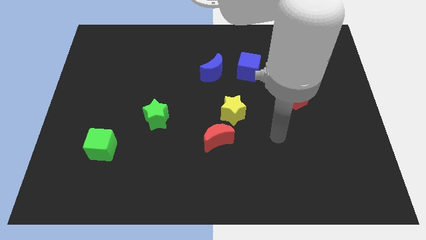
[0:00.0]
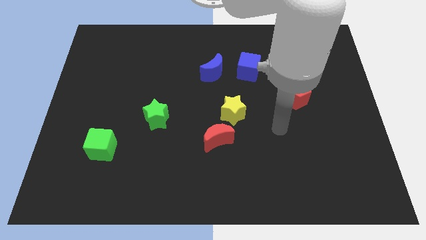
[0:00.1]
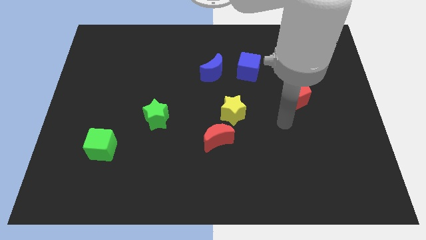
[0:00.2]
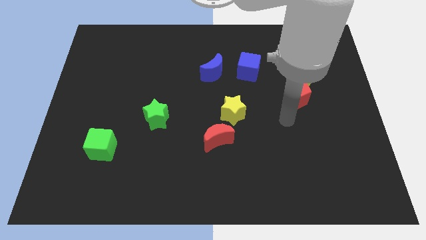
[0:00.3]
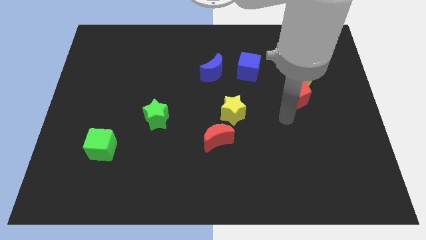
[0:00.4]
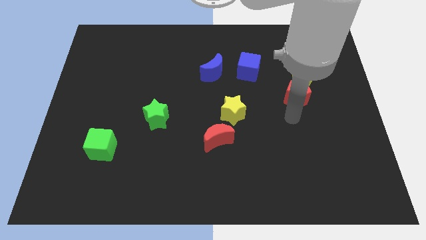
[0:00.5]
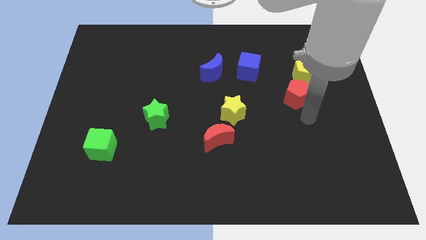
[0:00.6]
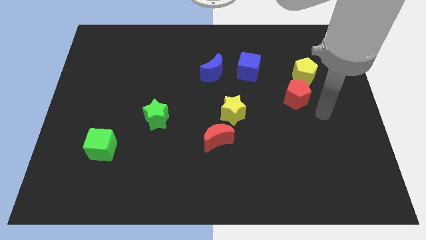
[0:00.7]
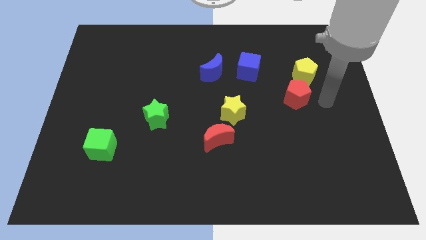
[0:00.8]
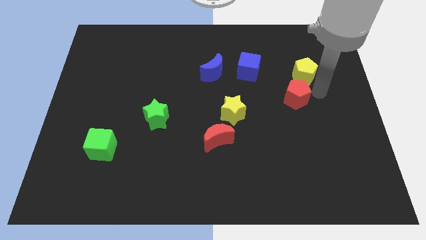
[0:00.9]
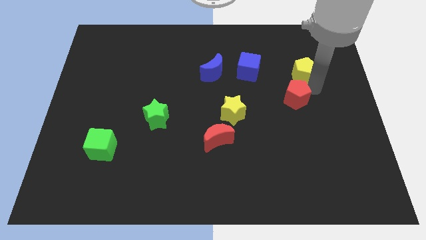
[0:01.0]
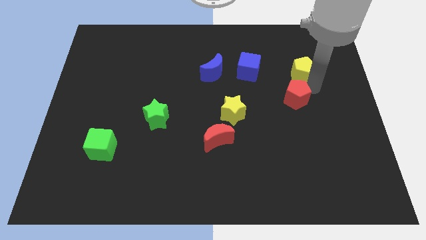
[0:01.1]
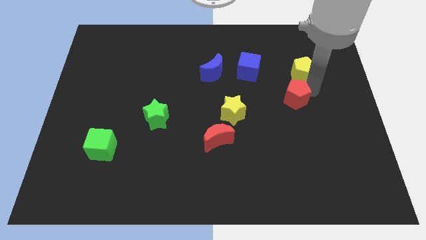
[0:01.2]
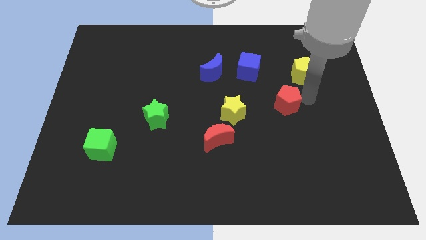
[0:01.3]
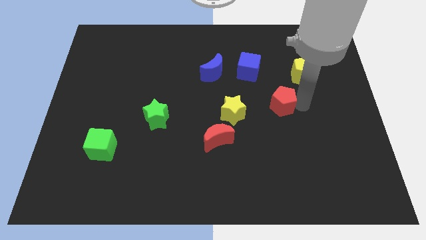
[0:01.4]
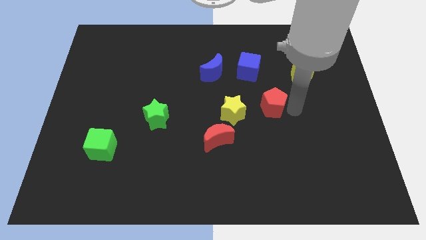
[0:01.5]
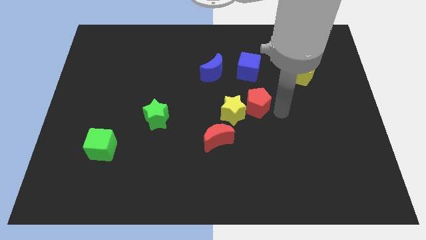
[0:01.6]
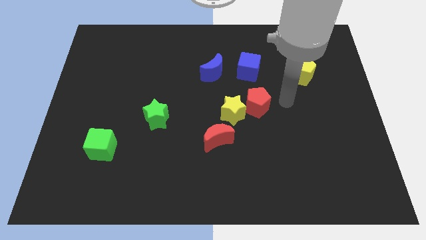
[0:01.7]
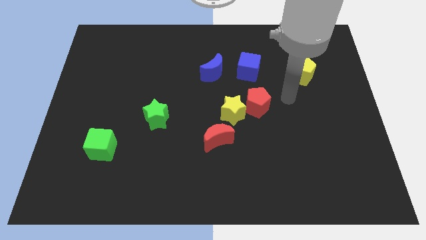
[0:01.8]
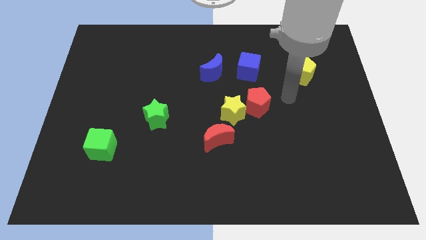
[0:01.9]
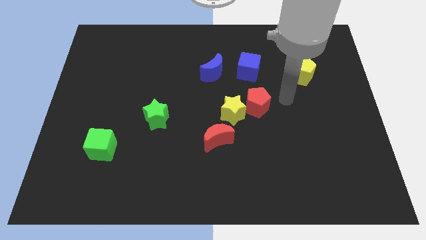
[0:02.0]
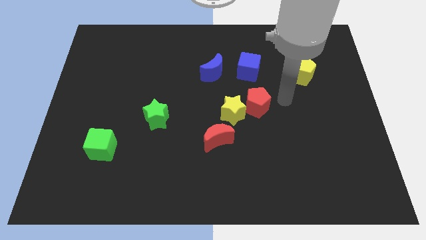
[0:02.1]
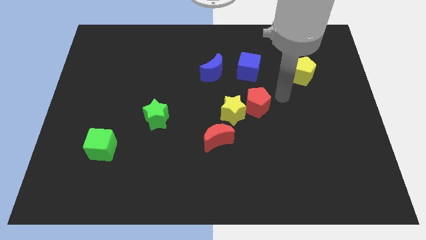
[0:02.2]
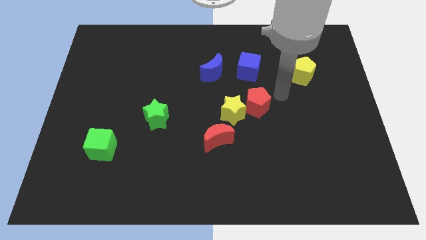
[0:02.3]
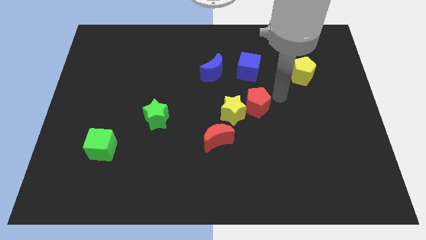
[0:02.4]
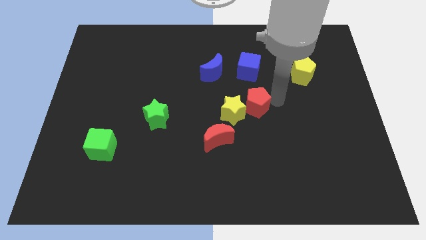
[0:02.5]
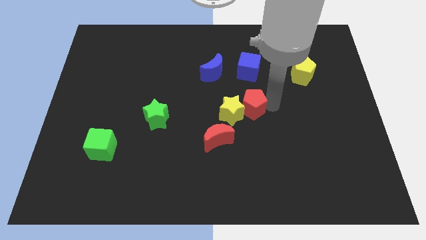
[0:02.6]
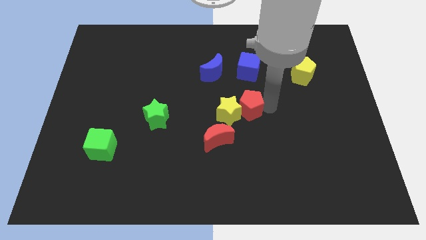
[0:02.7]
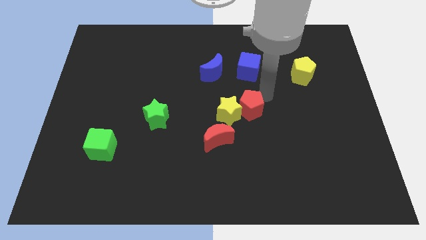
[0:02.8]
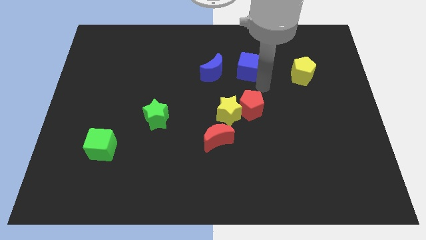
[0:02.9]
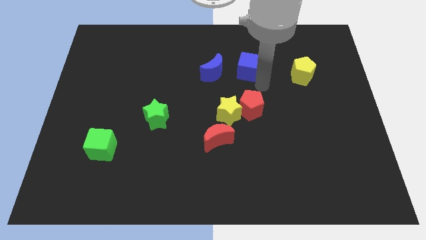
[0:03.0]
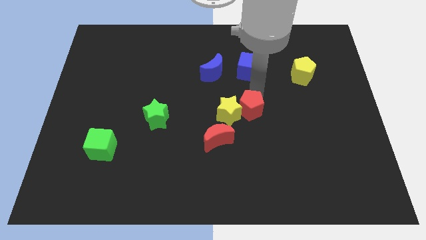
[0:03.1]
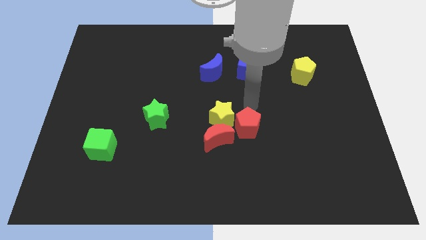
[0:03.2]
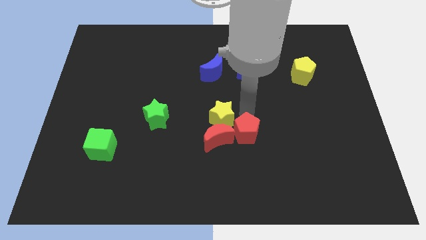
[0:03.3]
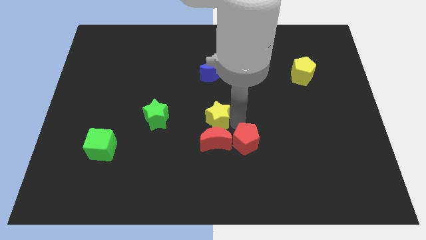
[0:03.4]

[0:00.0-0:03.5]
push the red pentagon into the right of red crescent

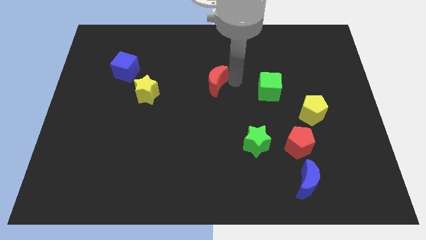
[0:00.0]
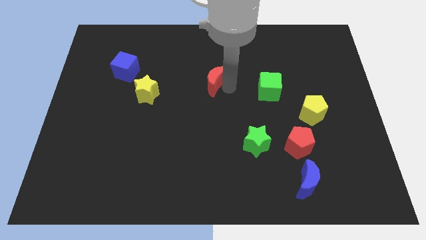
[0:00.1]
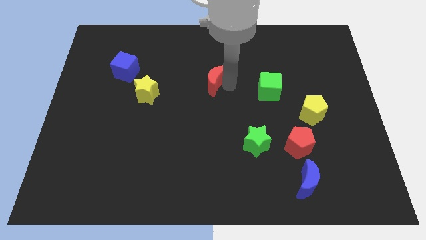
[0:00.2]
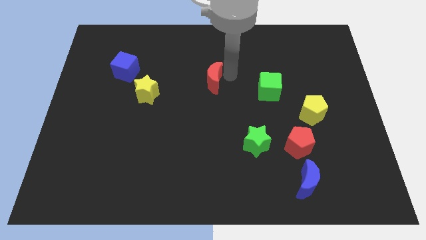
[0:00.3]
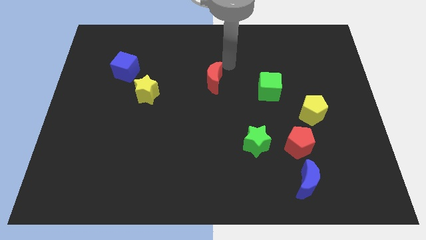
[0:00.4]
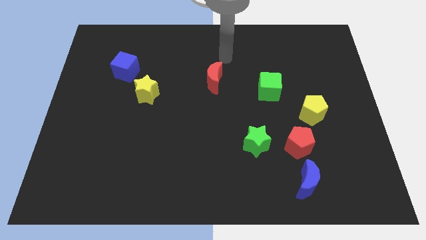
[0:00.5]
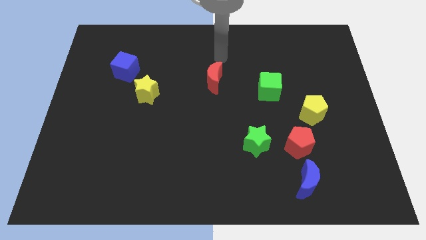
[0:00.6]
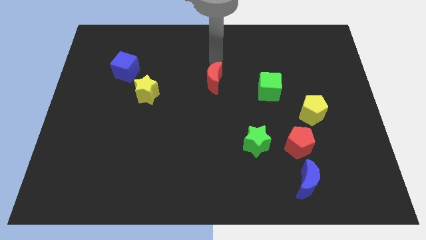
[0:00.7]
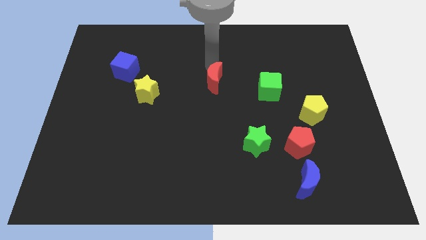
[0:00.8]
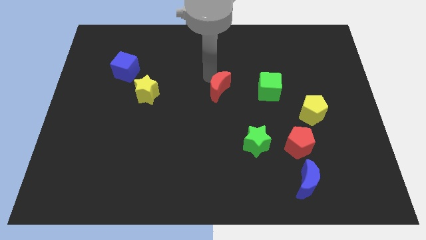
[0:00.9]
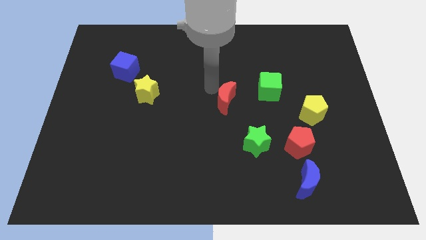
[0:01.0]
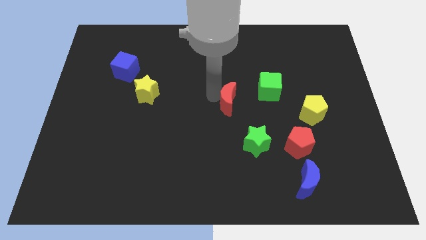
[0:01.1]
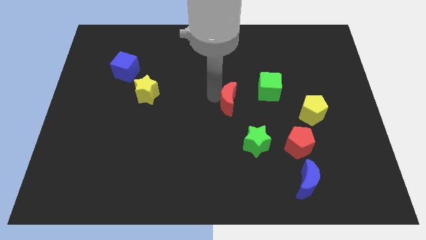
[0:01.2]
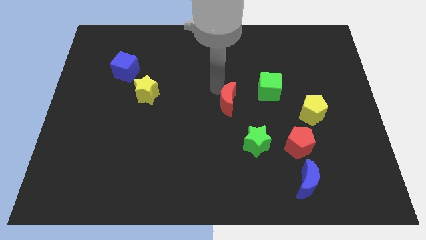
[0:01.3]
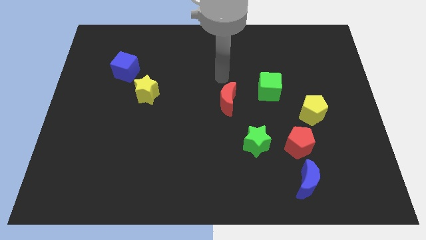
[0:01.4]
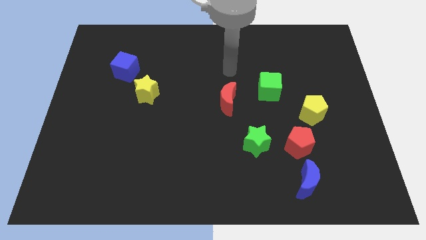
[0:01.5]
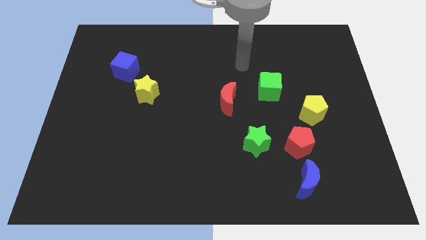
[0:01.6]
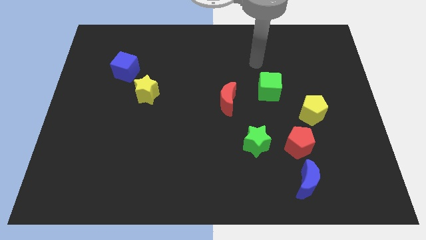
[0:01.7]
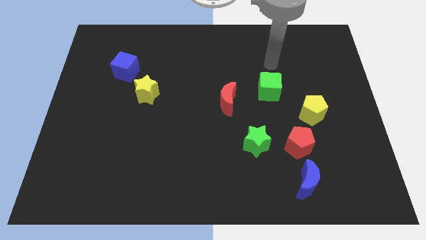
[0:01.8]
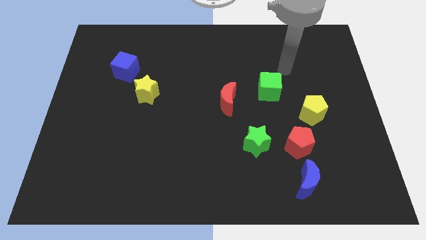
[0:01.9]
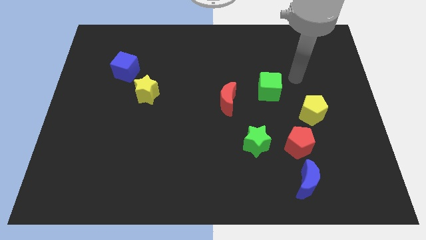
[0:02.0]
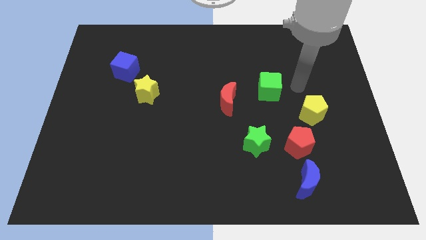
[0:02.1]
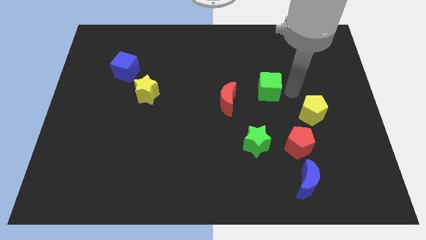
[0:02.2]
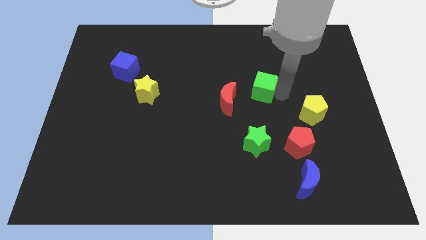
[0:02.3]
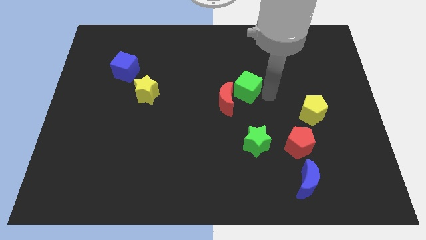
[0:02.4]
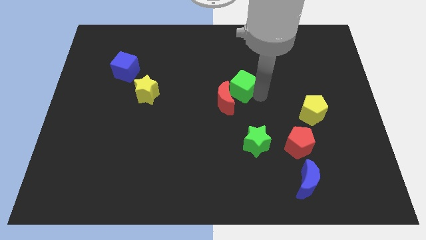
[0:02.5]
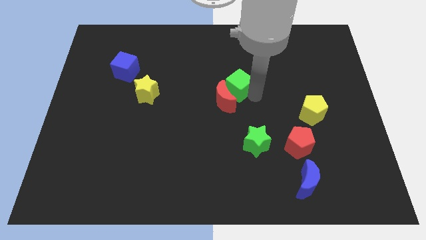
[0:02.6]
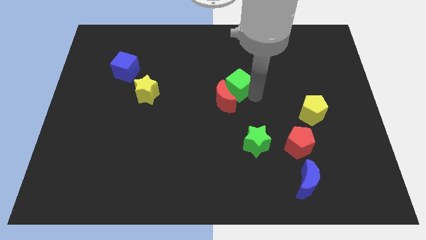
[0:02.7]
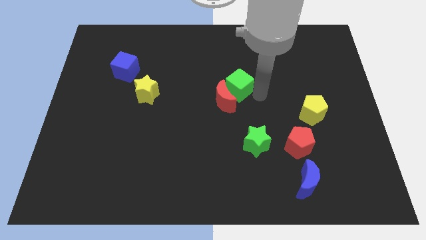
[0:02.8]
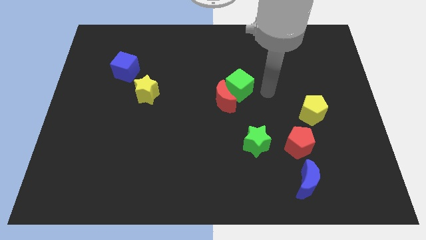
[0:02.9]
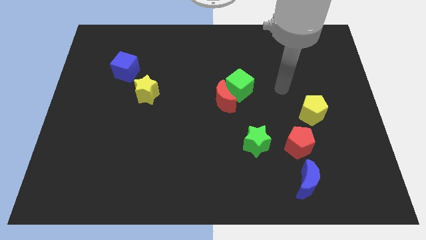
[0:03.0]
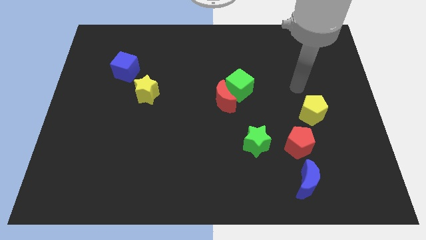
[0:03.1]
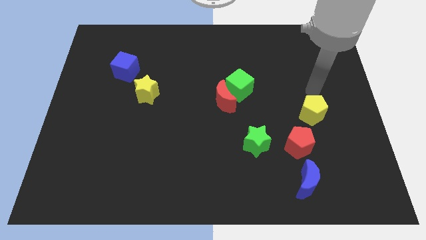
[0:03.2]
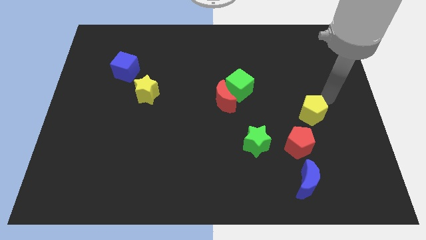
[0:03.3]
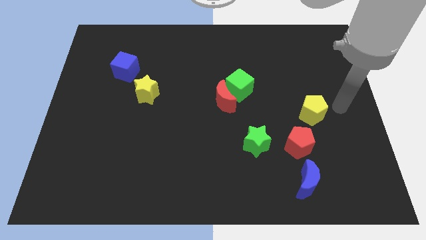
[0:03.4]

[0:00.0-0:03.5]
push the green cube to the top right side of the red crescent

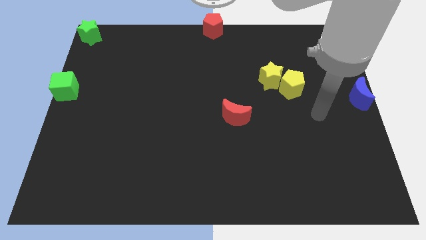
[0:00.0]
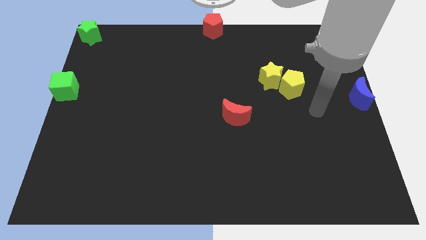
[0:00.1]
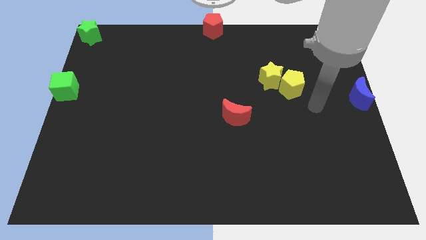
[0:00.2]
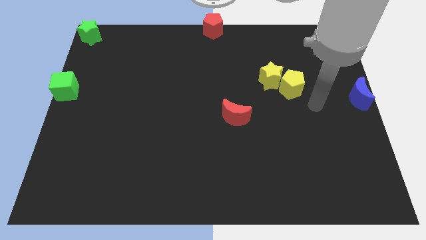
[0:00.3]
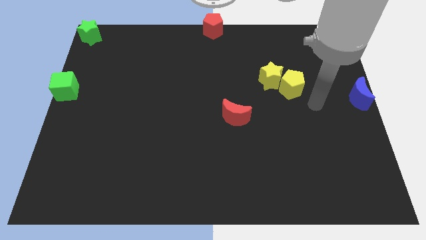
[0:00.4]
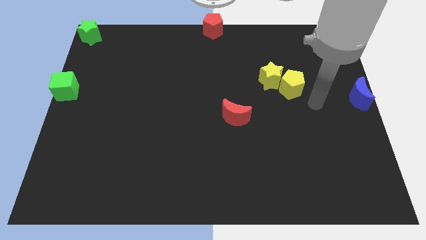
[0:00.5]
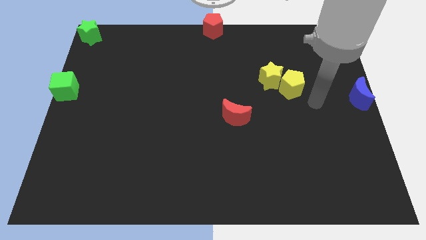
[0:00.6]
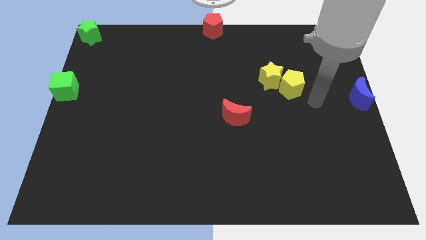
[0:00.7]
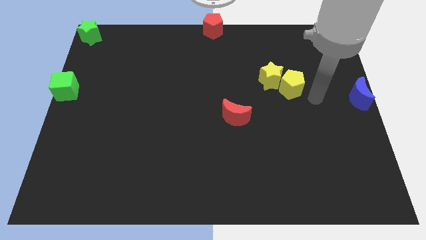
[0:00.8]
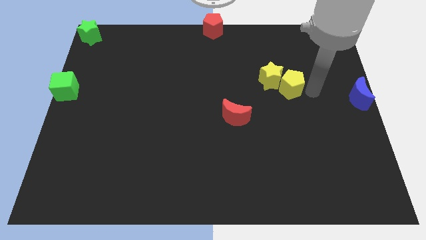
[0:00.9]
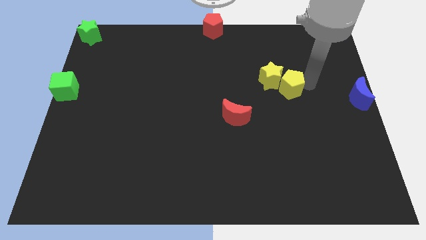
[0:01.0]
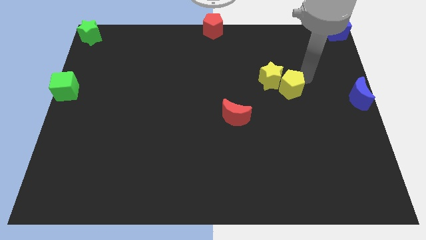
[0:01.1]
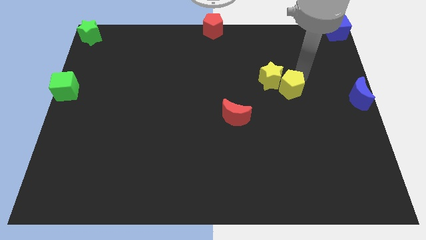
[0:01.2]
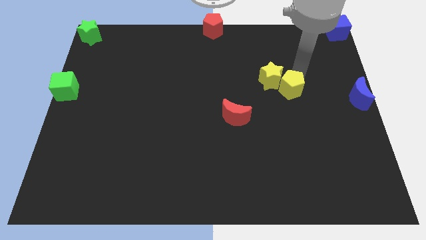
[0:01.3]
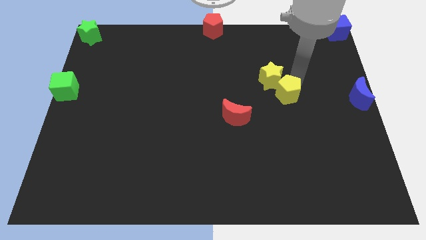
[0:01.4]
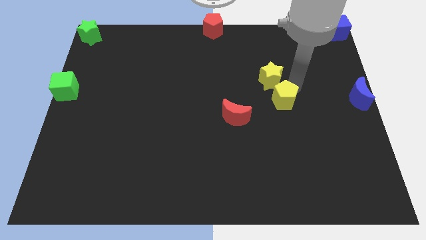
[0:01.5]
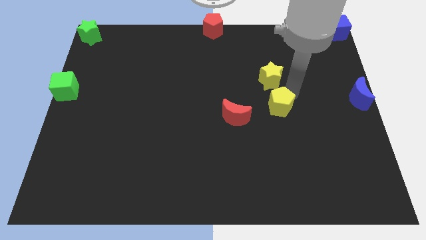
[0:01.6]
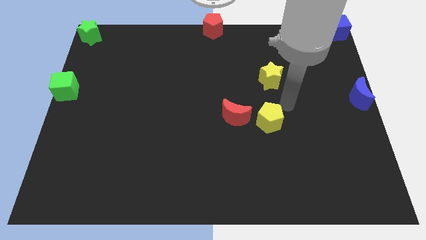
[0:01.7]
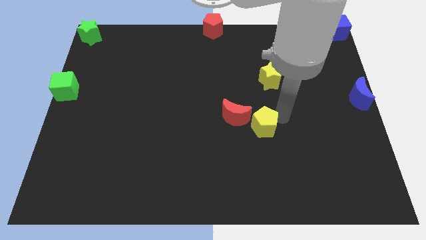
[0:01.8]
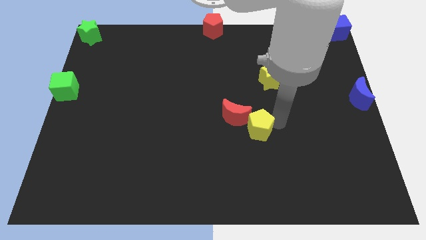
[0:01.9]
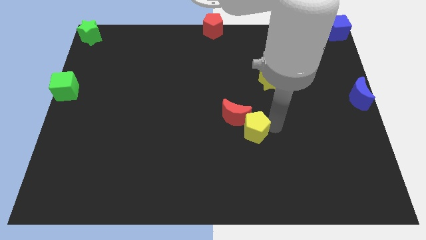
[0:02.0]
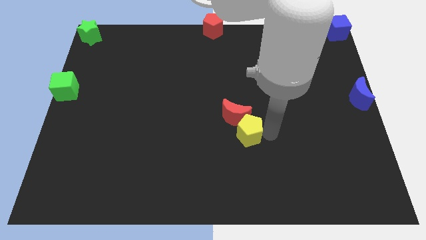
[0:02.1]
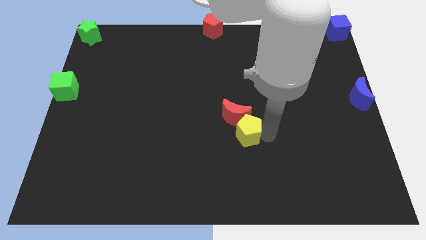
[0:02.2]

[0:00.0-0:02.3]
separate the yellow pentagon from the yellow star
